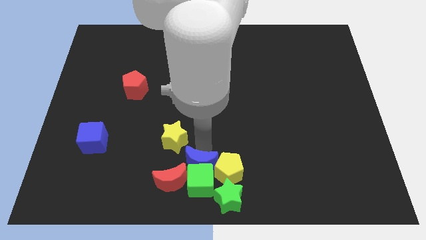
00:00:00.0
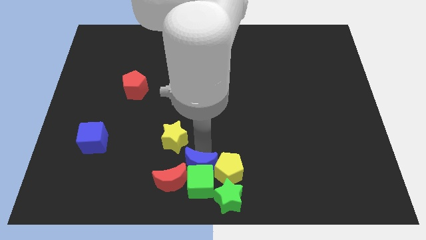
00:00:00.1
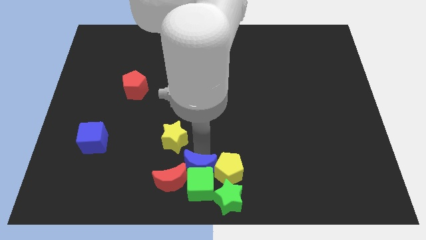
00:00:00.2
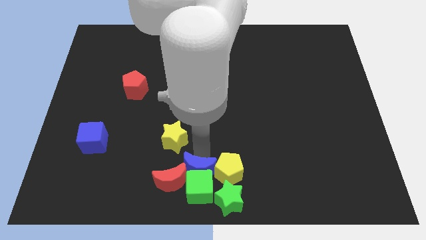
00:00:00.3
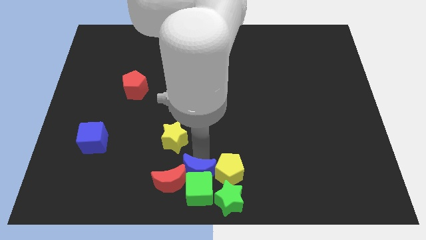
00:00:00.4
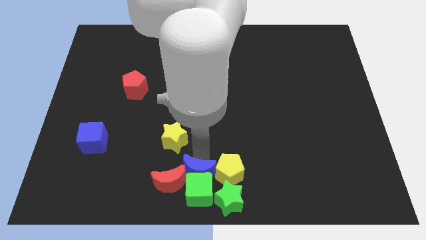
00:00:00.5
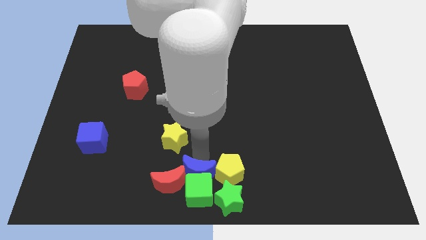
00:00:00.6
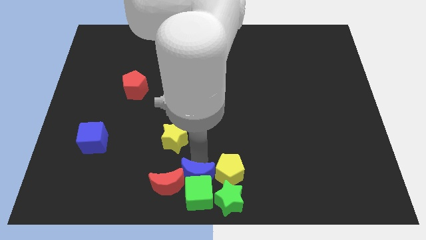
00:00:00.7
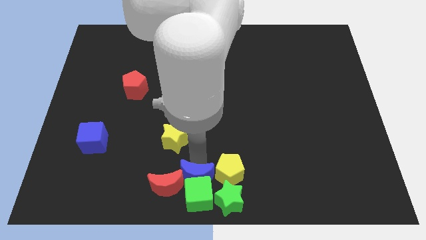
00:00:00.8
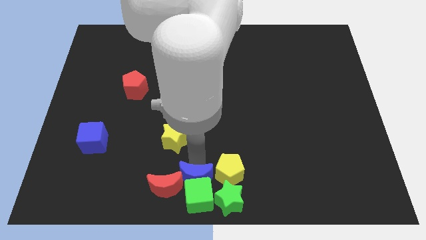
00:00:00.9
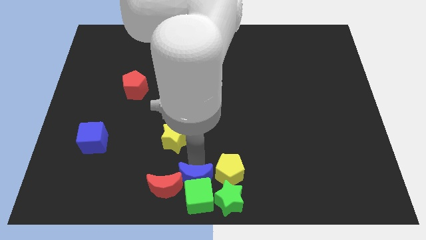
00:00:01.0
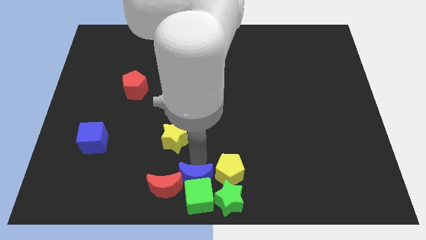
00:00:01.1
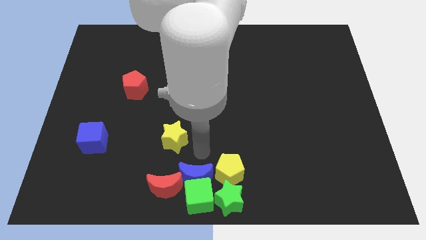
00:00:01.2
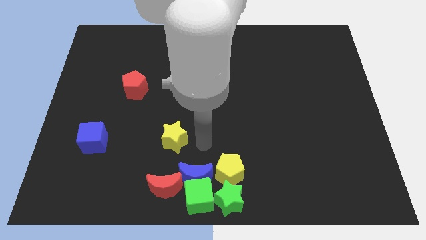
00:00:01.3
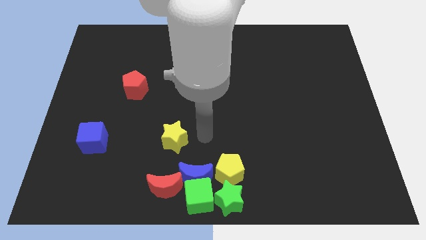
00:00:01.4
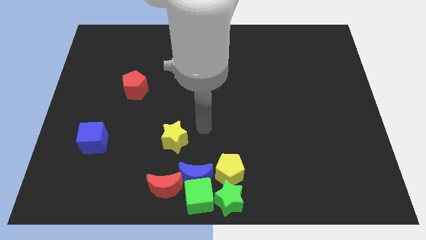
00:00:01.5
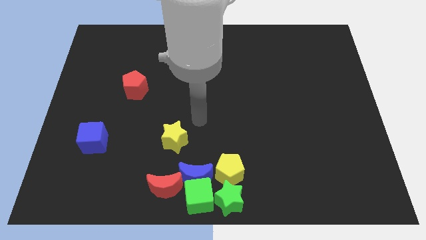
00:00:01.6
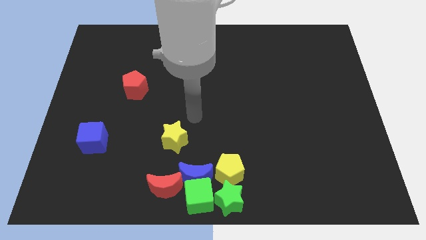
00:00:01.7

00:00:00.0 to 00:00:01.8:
push the blue crescent into the green cube

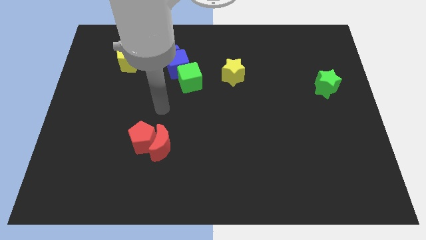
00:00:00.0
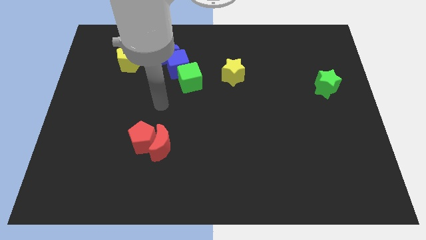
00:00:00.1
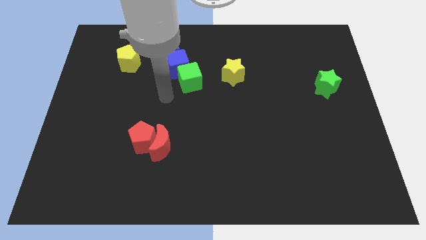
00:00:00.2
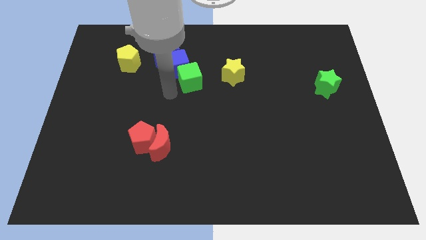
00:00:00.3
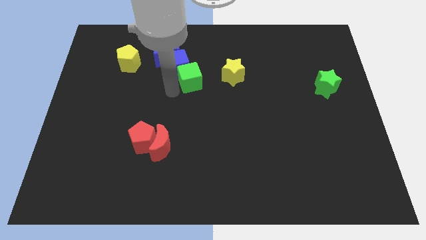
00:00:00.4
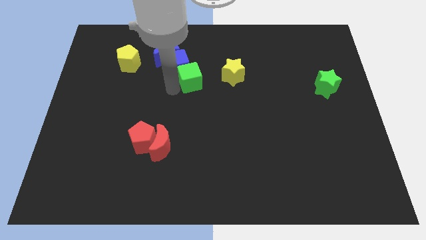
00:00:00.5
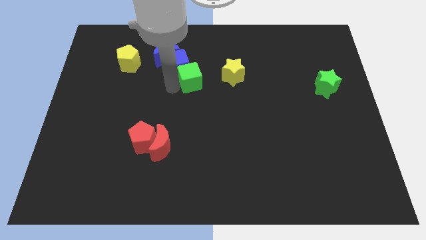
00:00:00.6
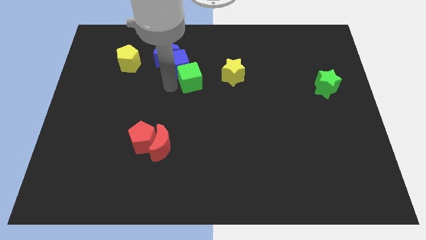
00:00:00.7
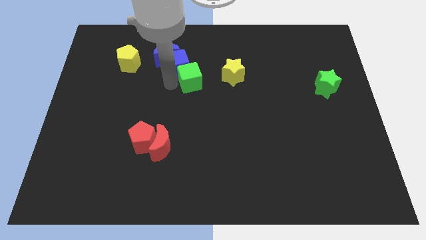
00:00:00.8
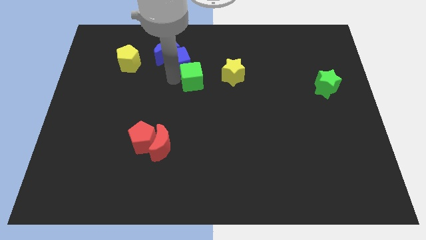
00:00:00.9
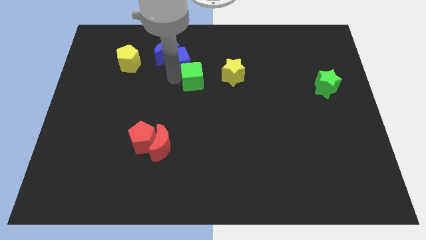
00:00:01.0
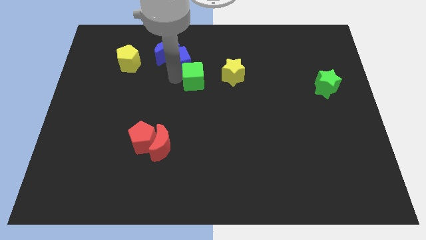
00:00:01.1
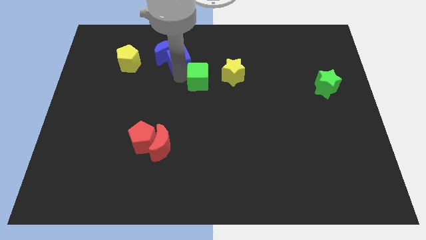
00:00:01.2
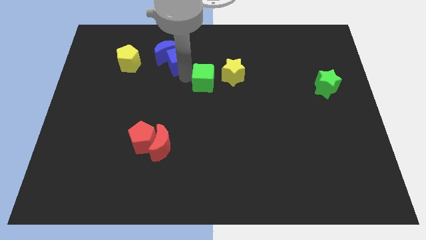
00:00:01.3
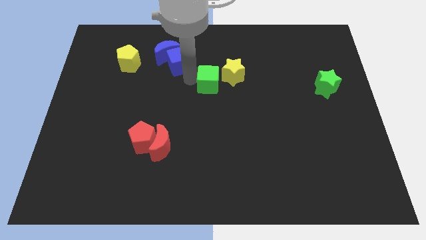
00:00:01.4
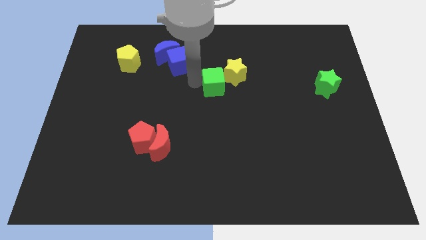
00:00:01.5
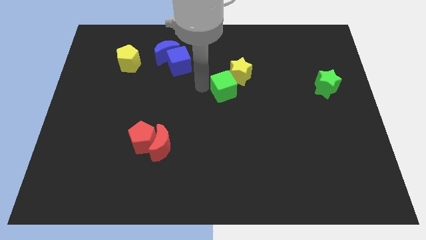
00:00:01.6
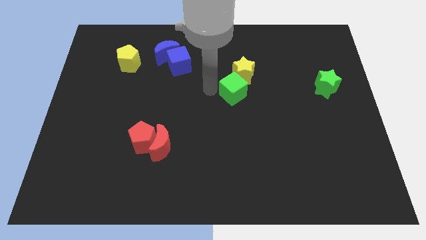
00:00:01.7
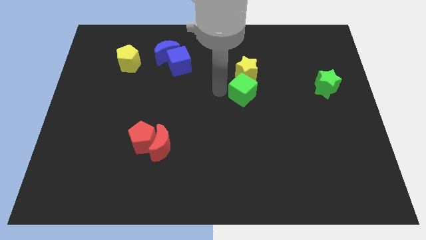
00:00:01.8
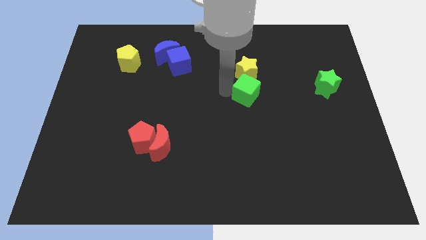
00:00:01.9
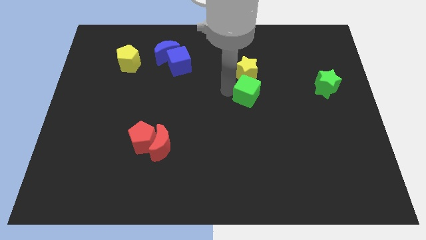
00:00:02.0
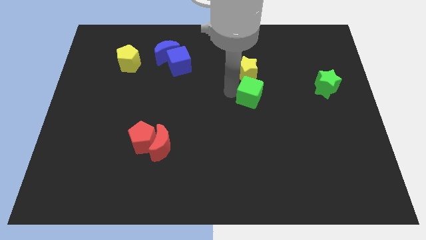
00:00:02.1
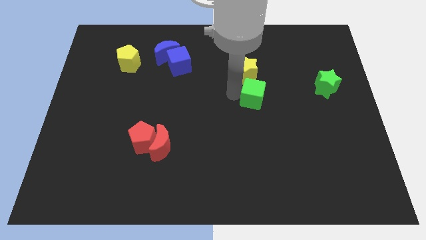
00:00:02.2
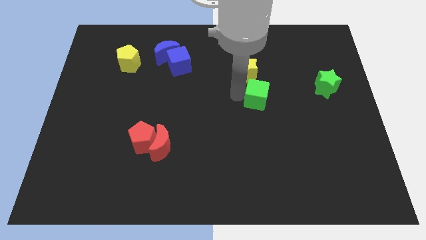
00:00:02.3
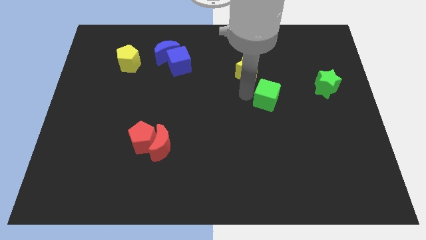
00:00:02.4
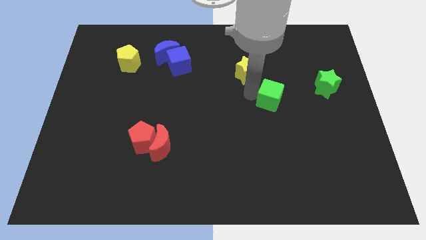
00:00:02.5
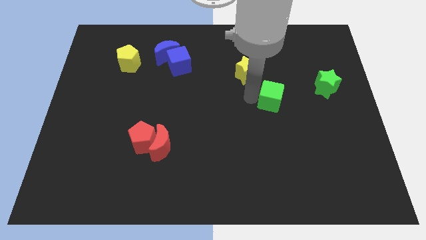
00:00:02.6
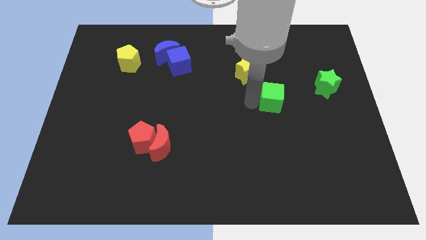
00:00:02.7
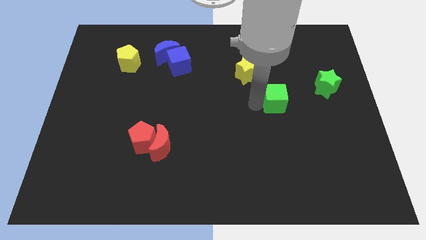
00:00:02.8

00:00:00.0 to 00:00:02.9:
move the green cube near to the green star

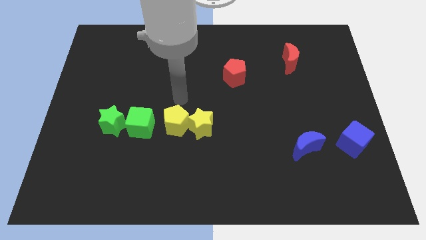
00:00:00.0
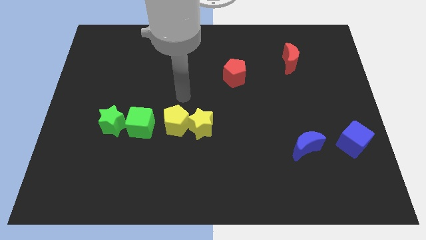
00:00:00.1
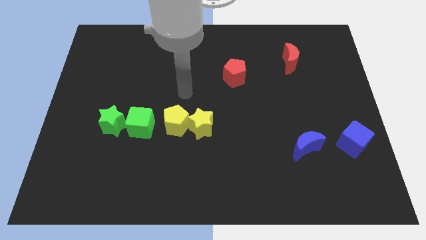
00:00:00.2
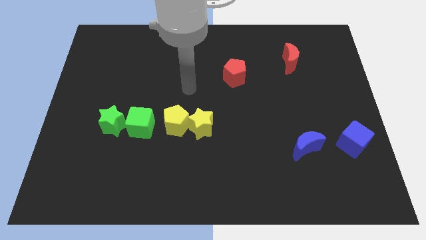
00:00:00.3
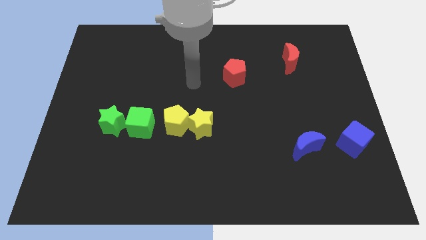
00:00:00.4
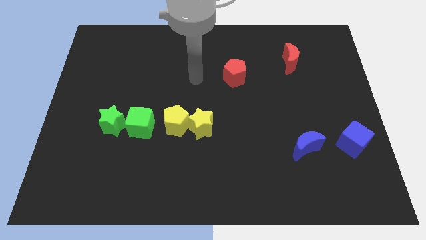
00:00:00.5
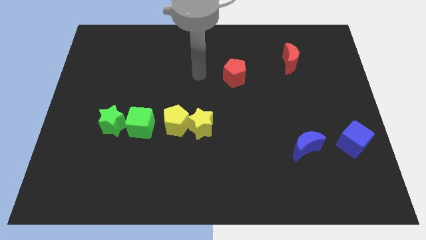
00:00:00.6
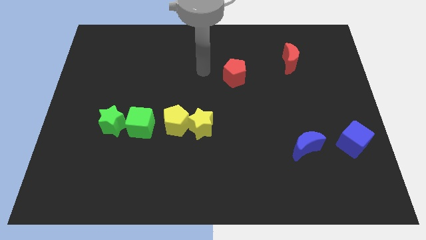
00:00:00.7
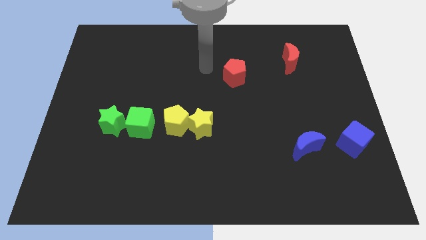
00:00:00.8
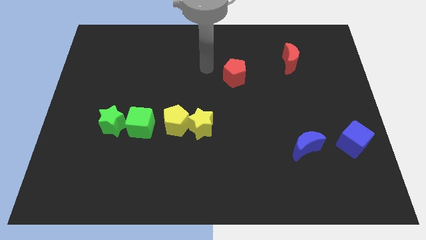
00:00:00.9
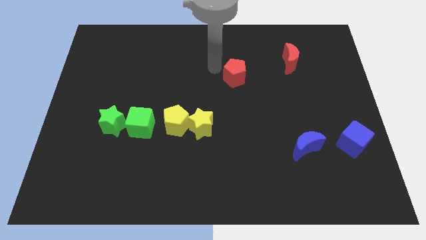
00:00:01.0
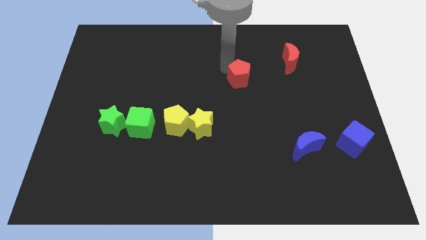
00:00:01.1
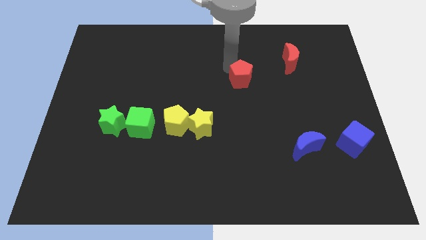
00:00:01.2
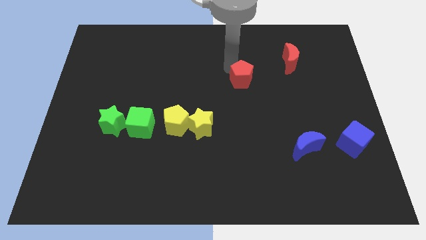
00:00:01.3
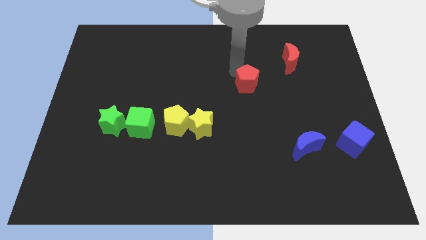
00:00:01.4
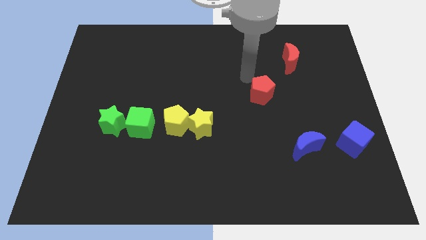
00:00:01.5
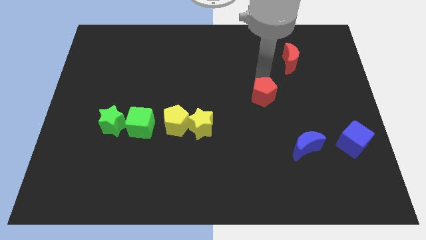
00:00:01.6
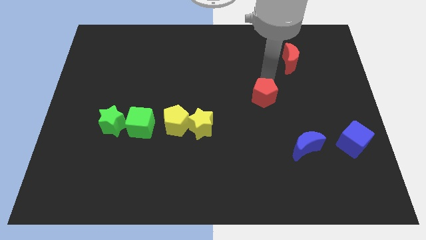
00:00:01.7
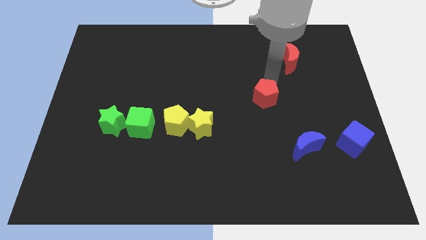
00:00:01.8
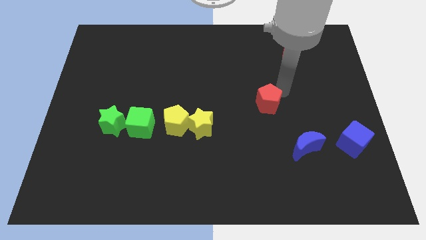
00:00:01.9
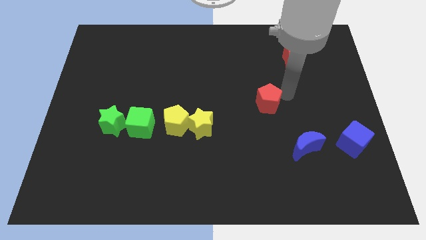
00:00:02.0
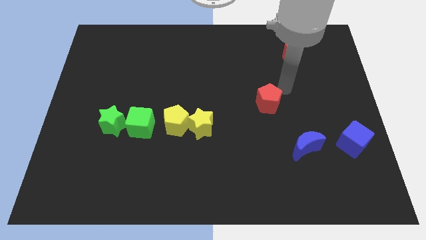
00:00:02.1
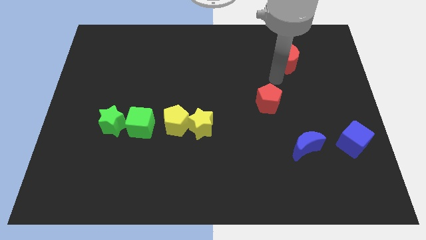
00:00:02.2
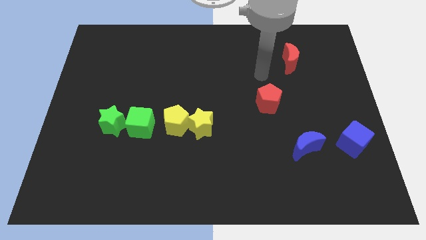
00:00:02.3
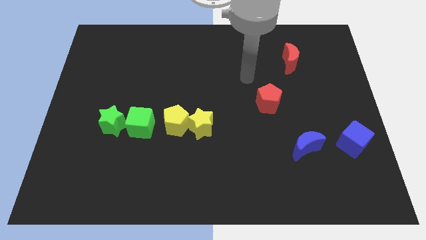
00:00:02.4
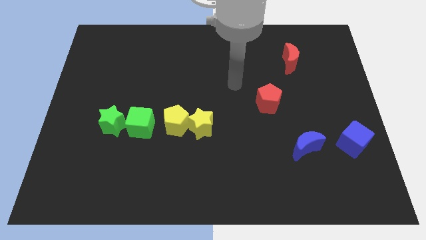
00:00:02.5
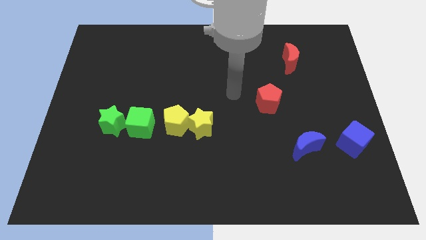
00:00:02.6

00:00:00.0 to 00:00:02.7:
move red pentagon diagonally towards blue crescent

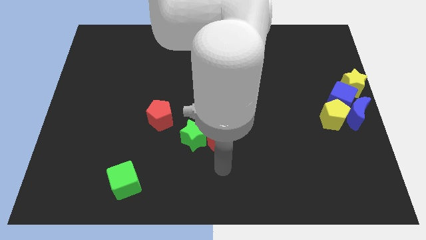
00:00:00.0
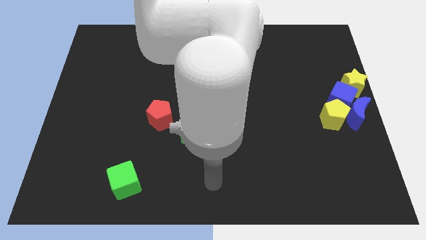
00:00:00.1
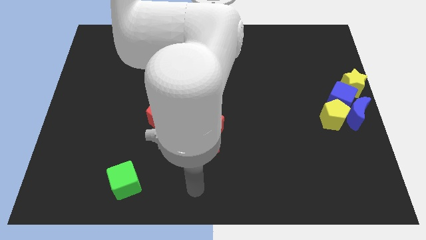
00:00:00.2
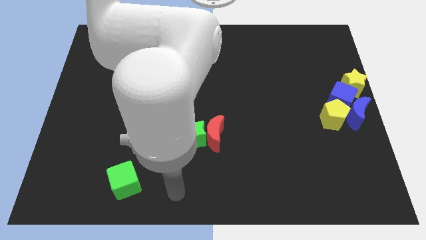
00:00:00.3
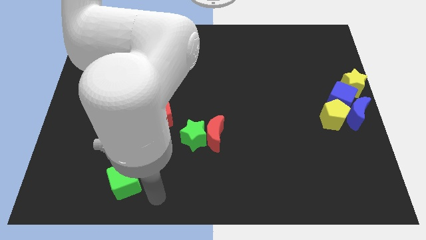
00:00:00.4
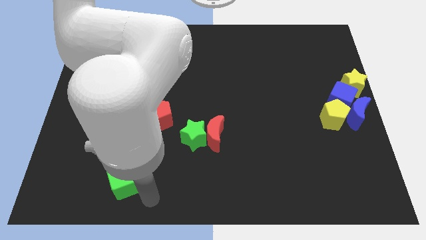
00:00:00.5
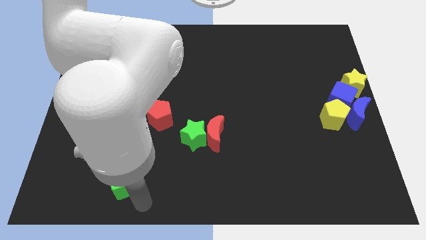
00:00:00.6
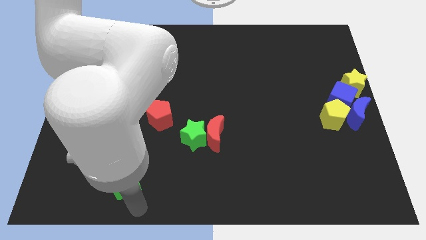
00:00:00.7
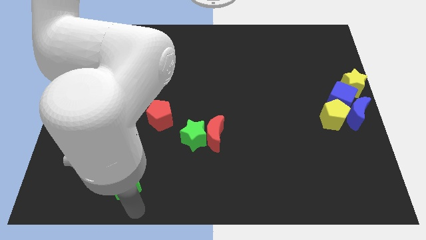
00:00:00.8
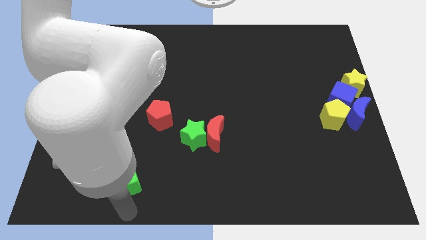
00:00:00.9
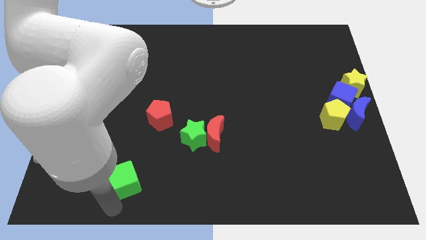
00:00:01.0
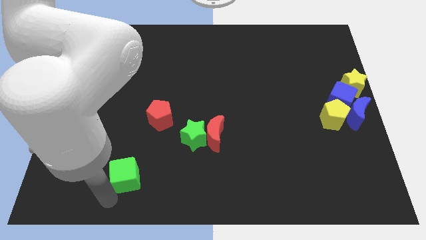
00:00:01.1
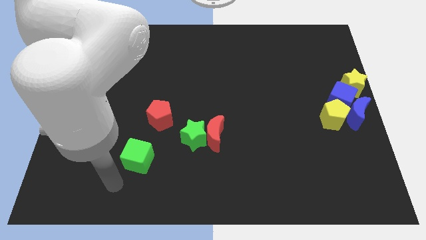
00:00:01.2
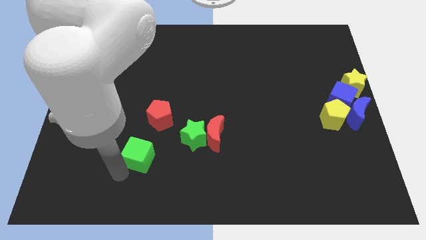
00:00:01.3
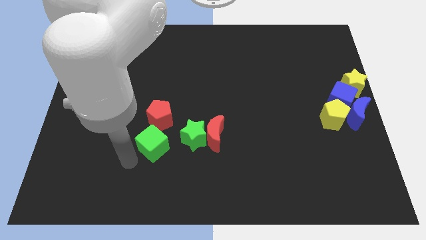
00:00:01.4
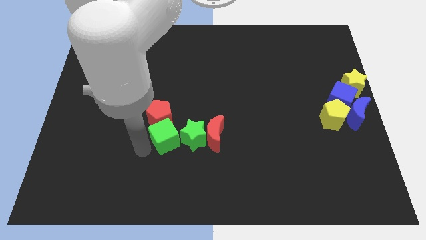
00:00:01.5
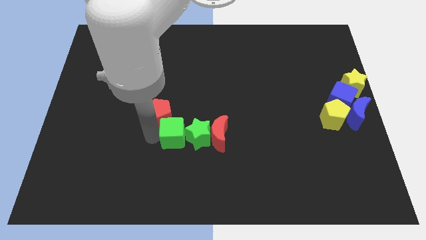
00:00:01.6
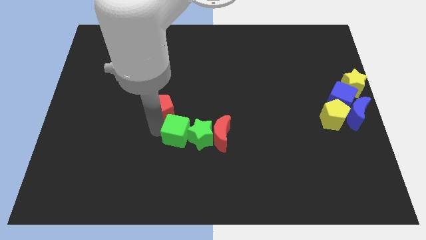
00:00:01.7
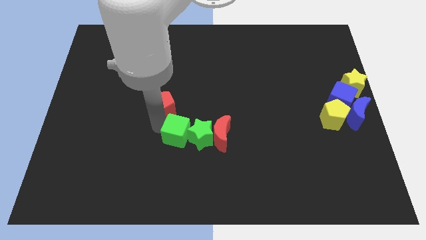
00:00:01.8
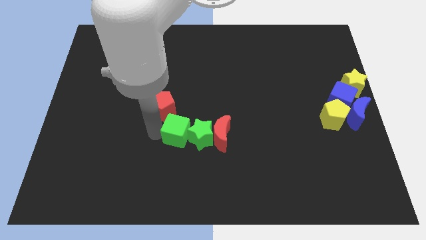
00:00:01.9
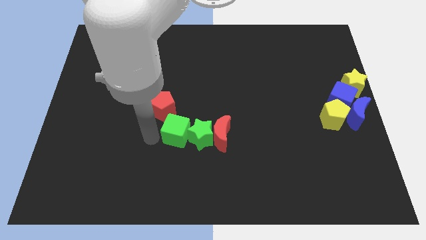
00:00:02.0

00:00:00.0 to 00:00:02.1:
move the green cube towards a group of elements
